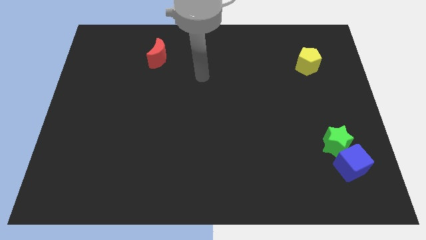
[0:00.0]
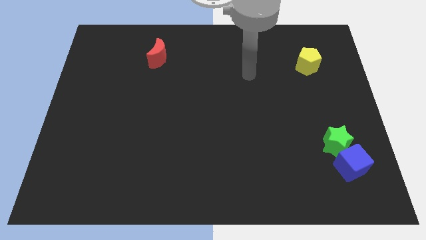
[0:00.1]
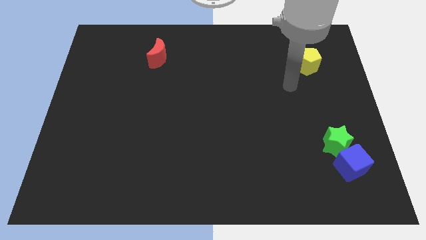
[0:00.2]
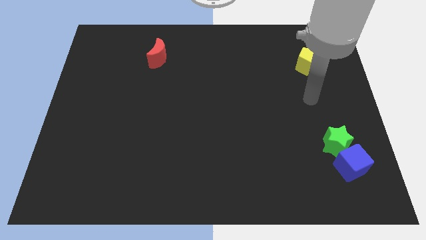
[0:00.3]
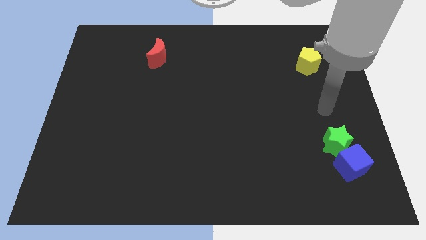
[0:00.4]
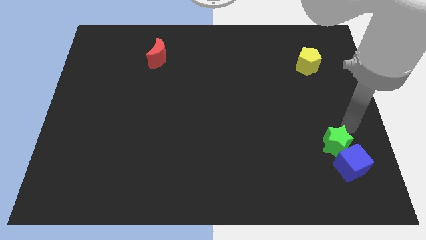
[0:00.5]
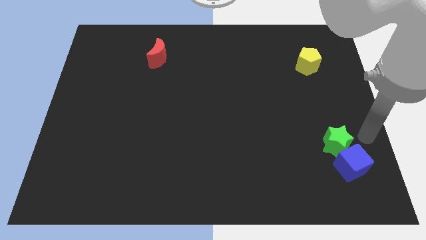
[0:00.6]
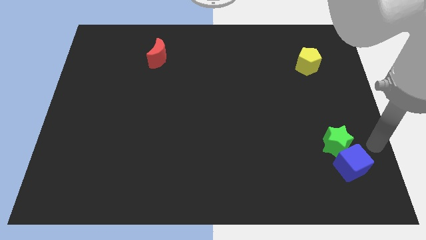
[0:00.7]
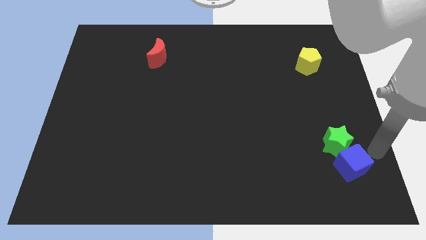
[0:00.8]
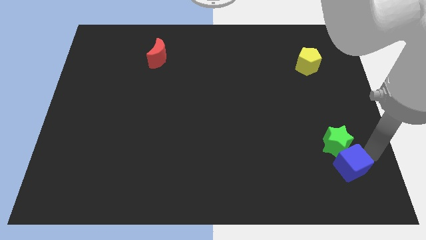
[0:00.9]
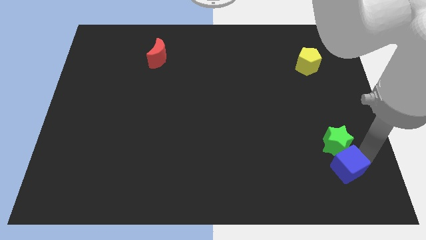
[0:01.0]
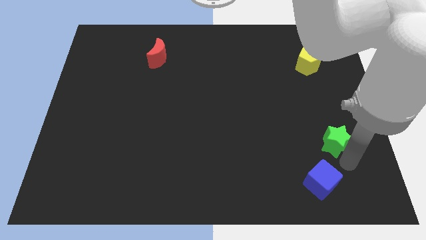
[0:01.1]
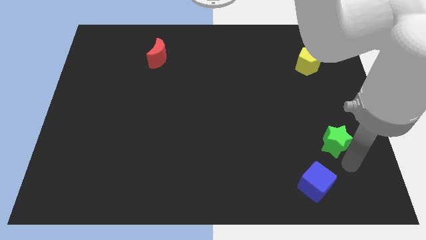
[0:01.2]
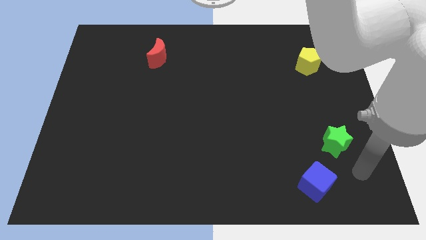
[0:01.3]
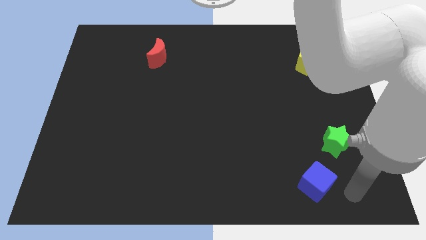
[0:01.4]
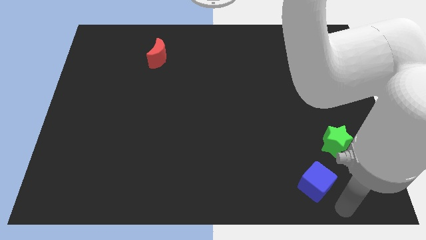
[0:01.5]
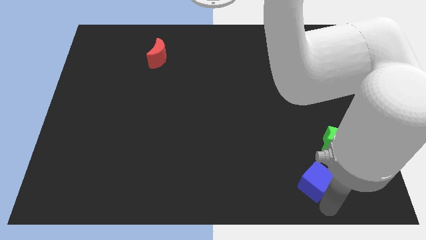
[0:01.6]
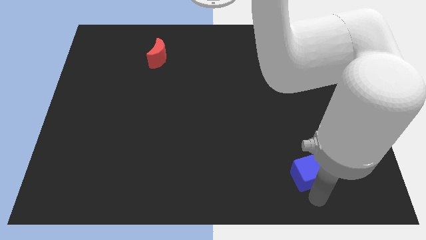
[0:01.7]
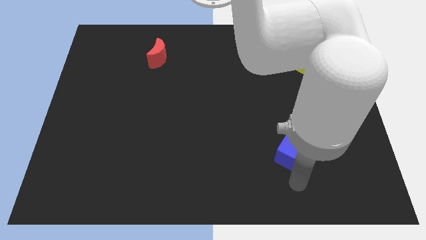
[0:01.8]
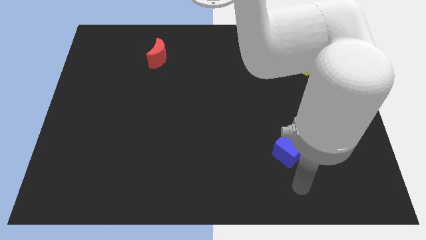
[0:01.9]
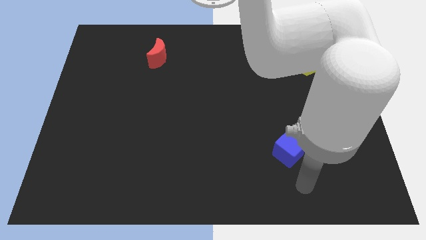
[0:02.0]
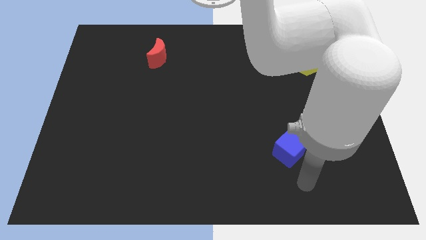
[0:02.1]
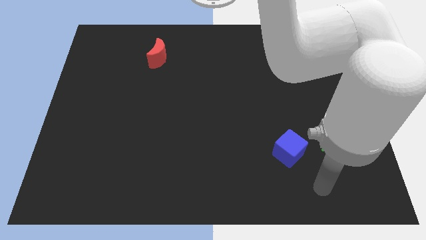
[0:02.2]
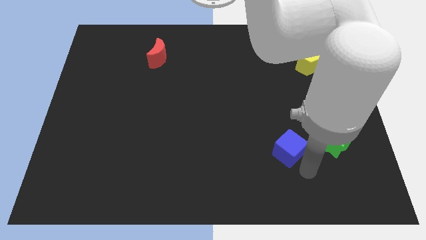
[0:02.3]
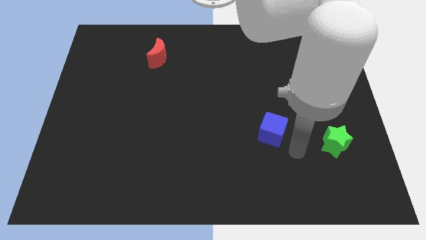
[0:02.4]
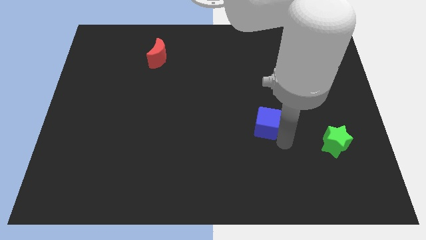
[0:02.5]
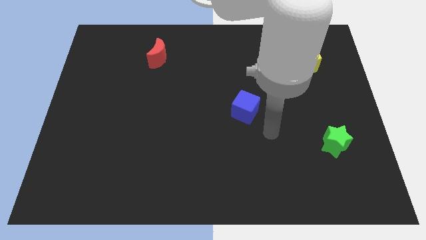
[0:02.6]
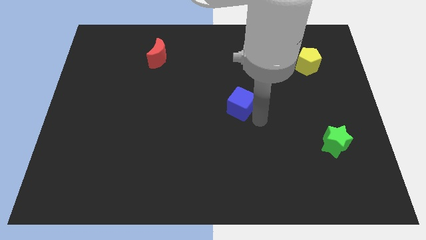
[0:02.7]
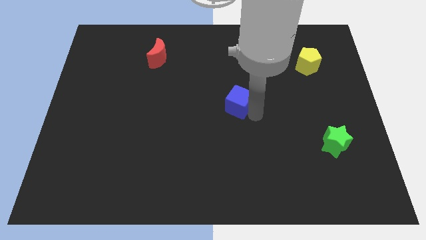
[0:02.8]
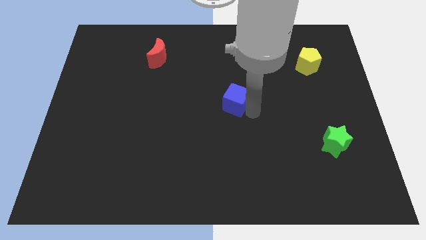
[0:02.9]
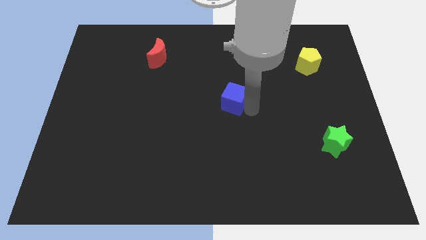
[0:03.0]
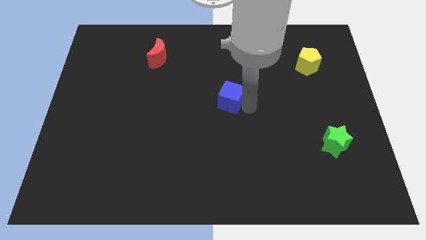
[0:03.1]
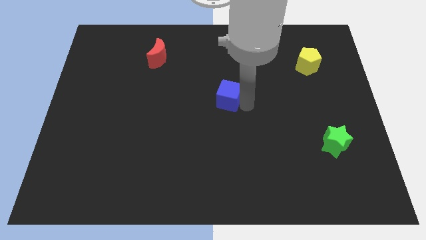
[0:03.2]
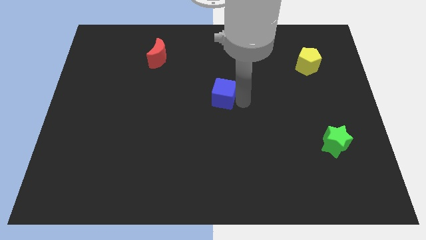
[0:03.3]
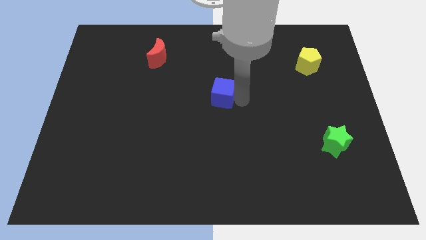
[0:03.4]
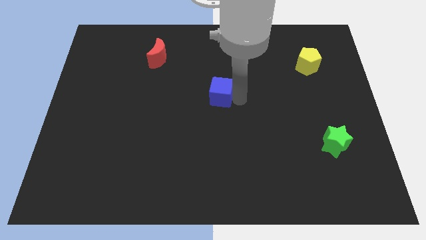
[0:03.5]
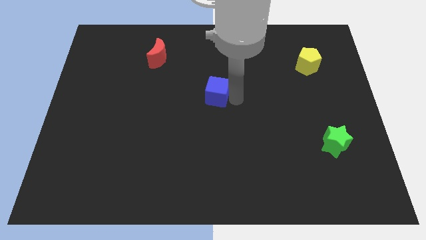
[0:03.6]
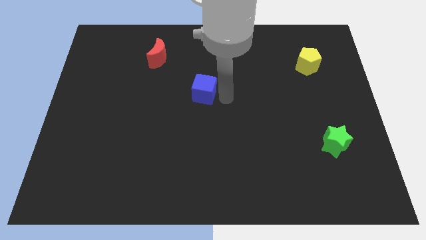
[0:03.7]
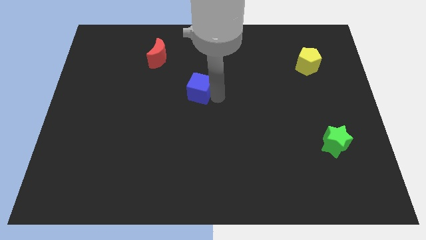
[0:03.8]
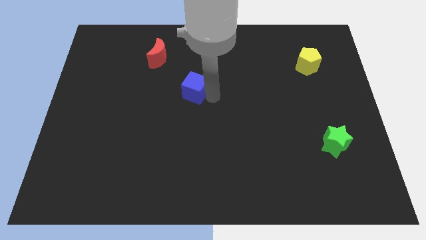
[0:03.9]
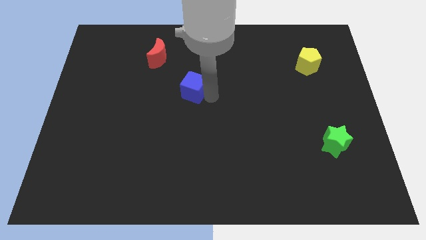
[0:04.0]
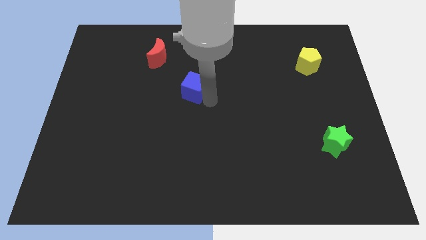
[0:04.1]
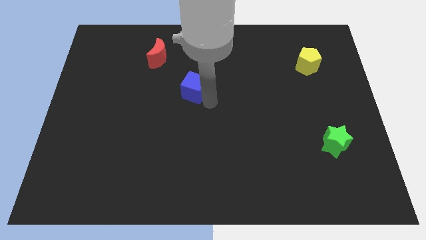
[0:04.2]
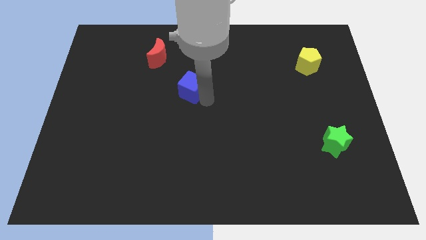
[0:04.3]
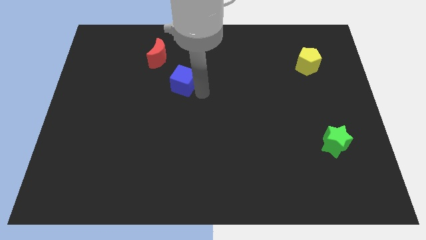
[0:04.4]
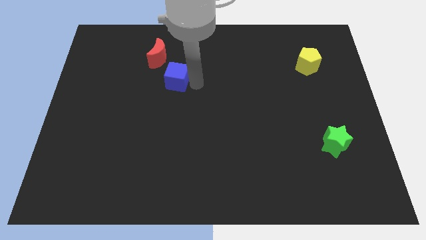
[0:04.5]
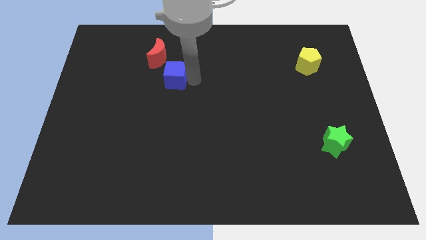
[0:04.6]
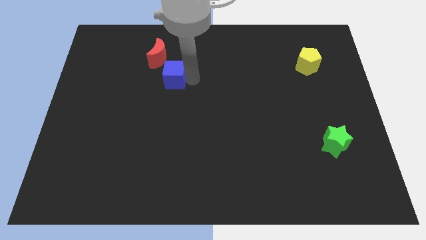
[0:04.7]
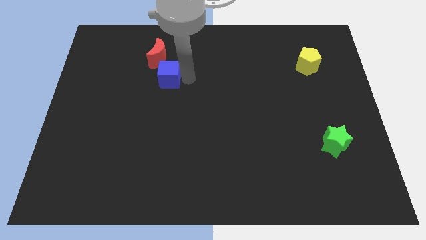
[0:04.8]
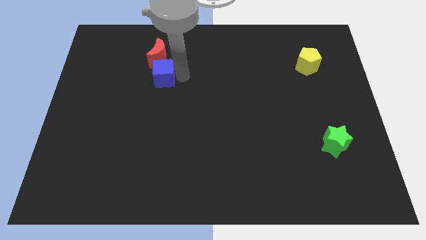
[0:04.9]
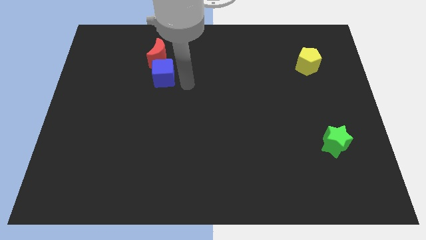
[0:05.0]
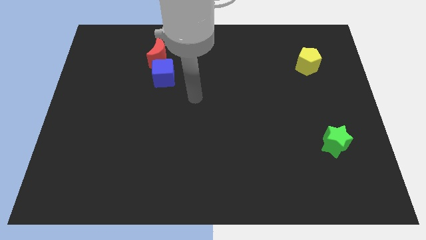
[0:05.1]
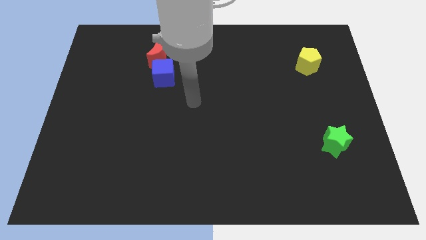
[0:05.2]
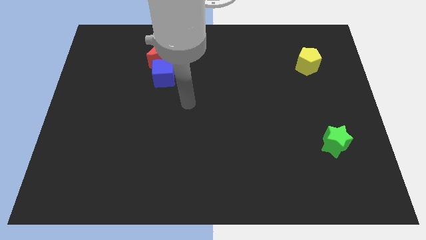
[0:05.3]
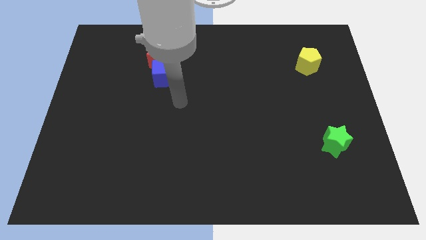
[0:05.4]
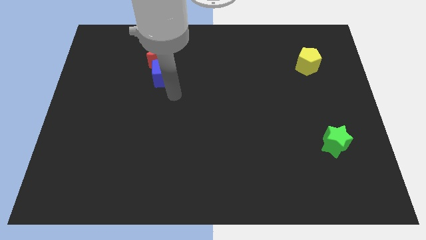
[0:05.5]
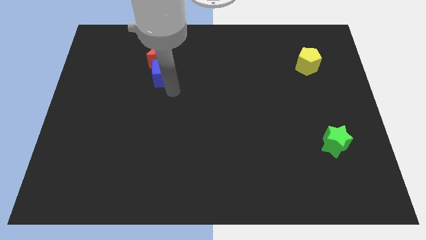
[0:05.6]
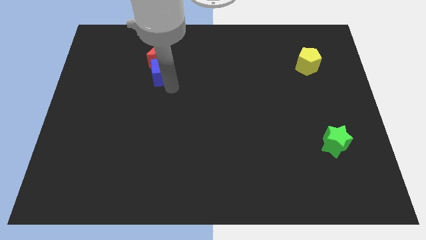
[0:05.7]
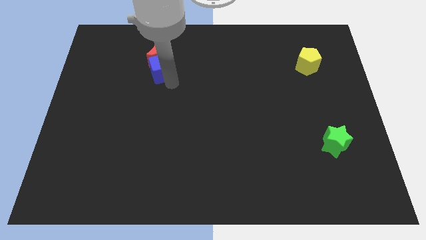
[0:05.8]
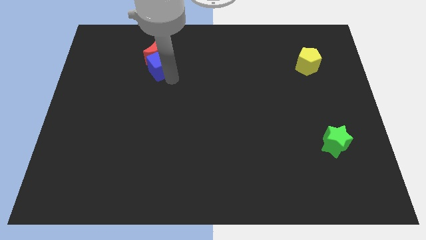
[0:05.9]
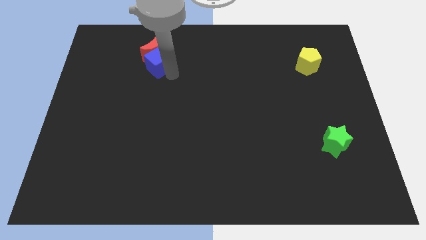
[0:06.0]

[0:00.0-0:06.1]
move the blue block close to the moon

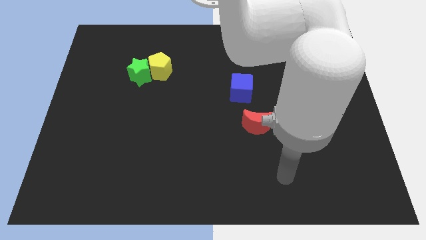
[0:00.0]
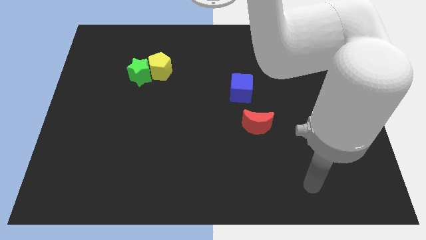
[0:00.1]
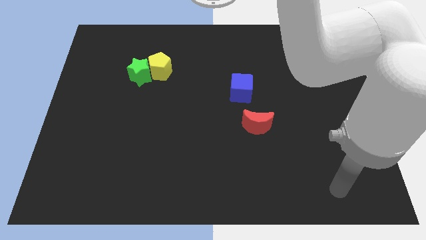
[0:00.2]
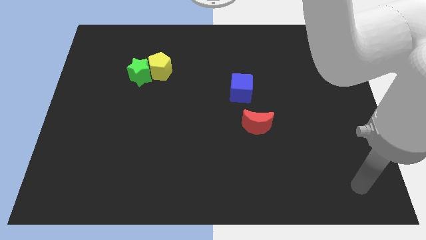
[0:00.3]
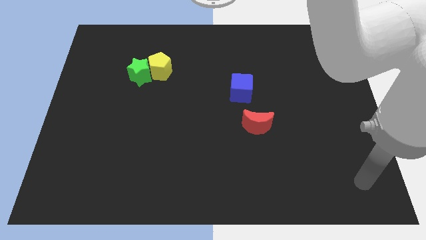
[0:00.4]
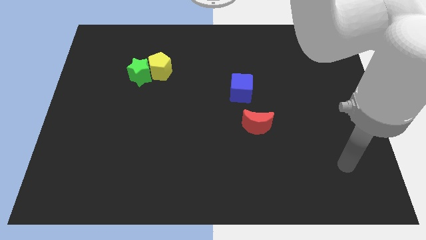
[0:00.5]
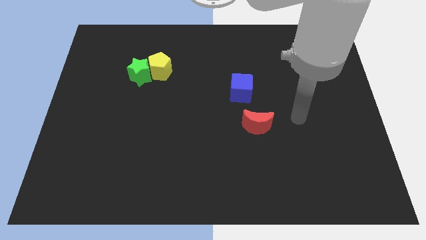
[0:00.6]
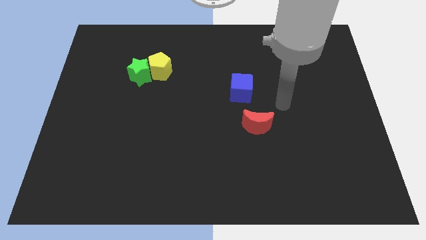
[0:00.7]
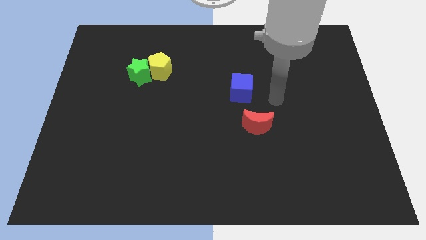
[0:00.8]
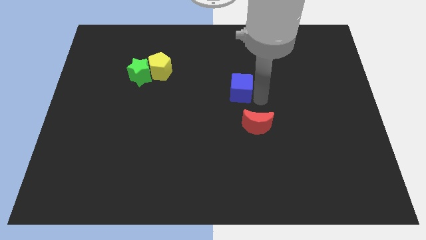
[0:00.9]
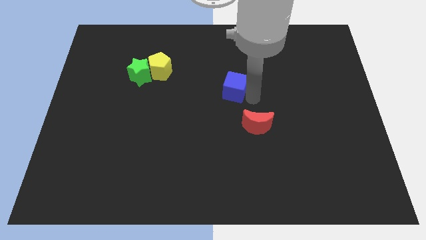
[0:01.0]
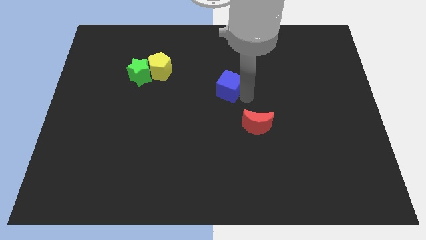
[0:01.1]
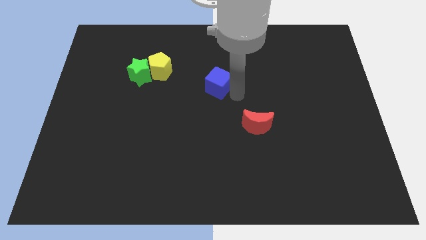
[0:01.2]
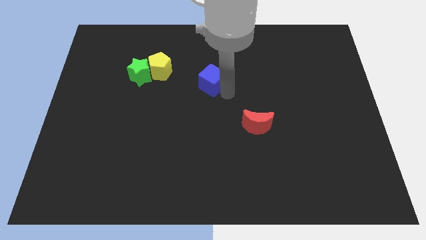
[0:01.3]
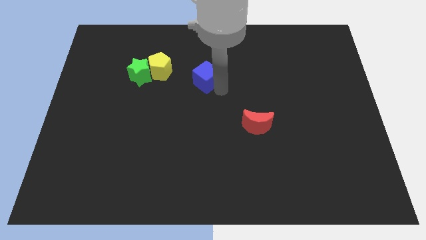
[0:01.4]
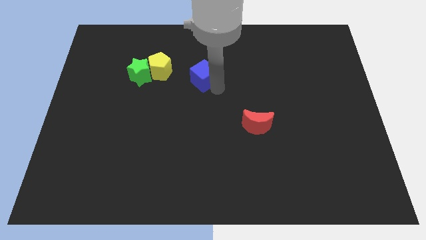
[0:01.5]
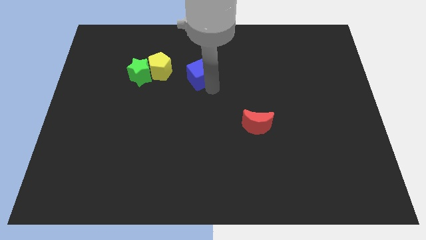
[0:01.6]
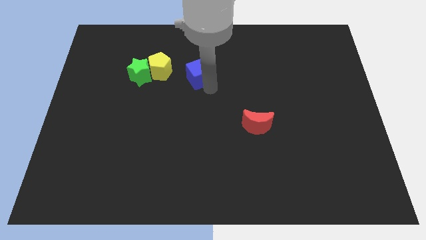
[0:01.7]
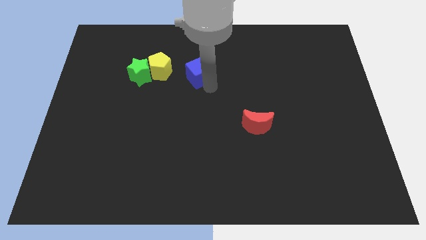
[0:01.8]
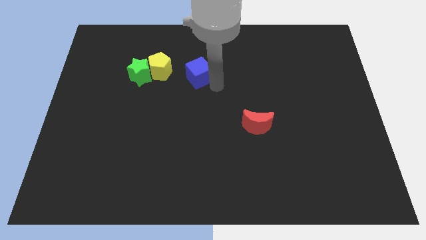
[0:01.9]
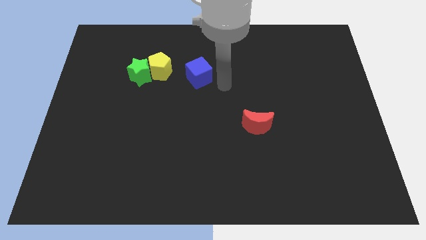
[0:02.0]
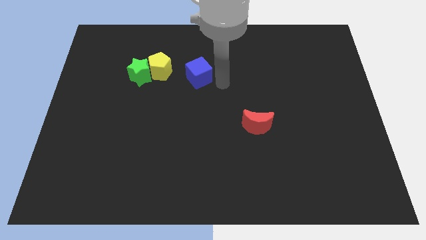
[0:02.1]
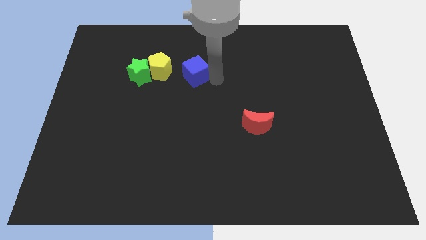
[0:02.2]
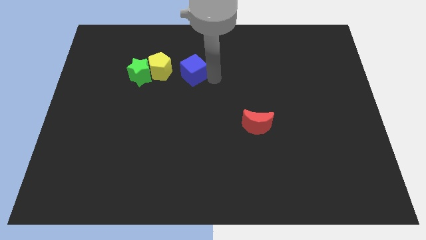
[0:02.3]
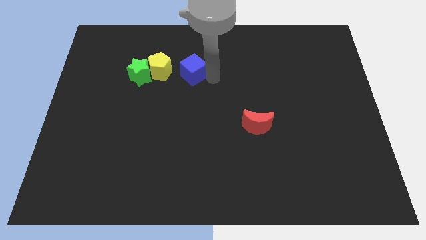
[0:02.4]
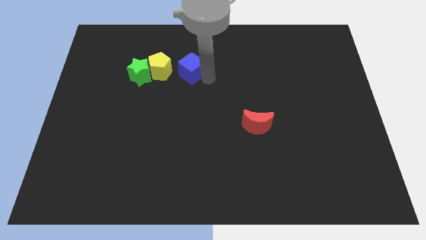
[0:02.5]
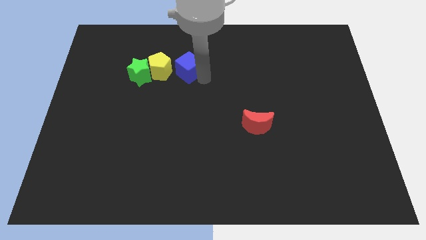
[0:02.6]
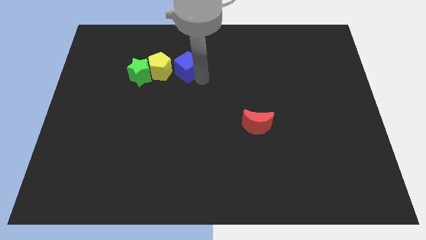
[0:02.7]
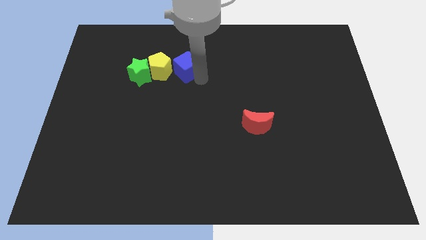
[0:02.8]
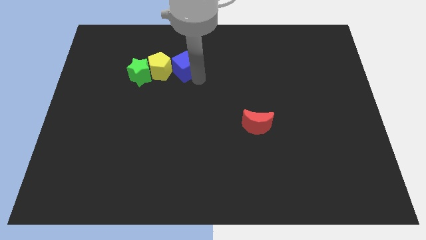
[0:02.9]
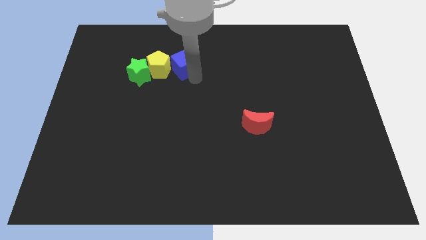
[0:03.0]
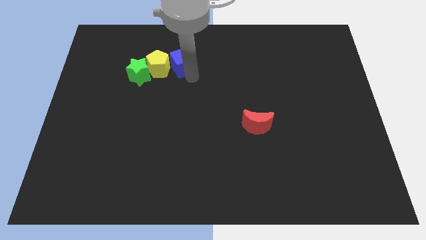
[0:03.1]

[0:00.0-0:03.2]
move the blue cube to the pentagon
